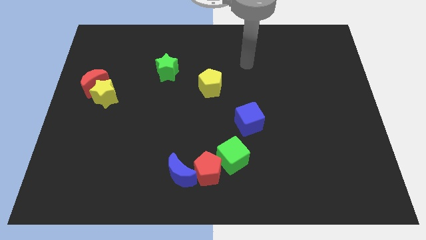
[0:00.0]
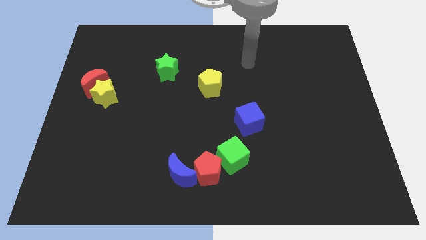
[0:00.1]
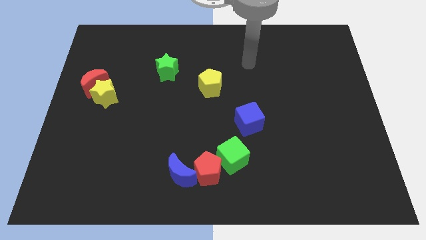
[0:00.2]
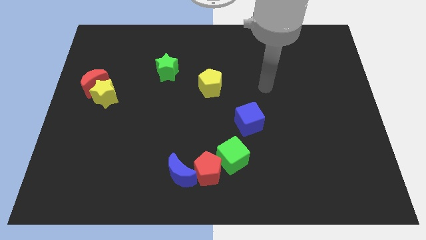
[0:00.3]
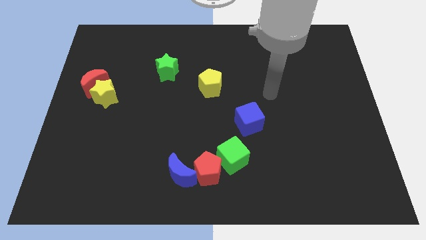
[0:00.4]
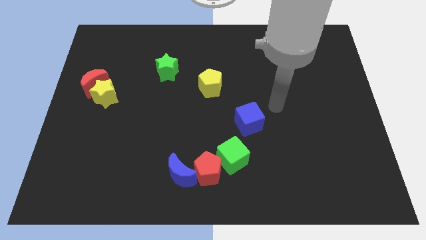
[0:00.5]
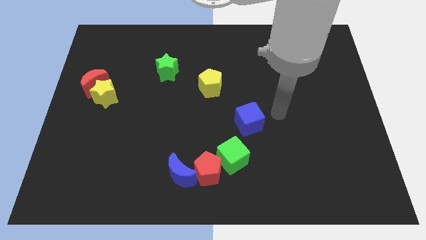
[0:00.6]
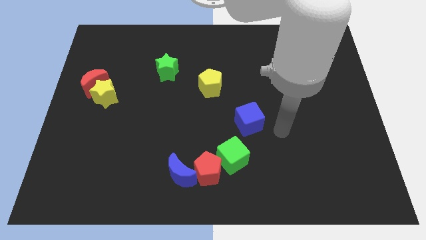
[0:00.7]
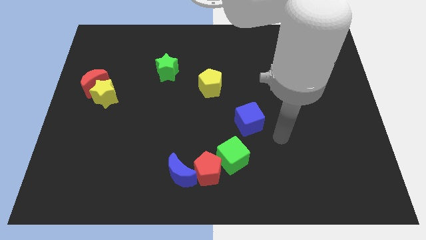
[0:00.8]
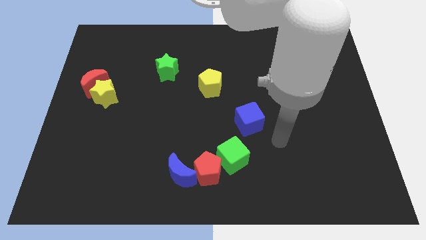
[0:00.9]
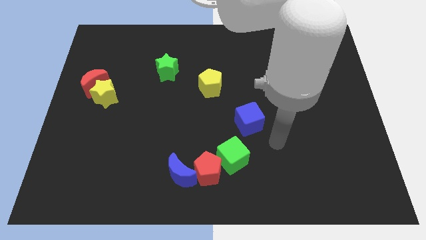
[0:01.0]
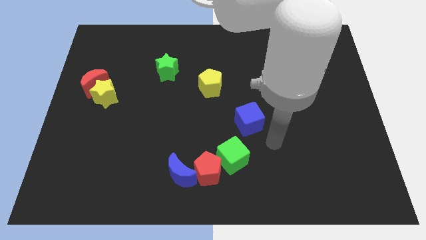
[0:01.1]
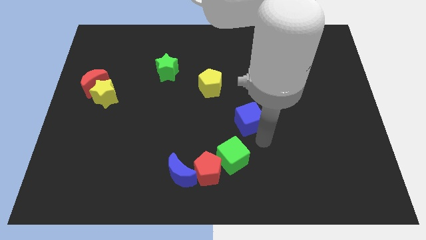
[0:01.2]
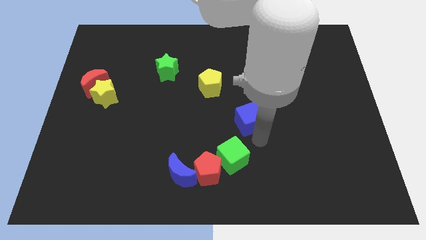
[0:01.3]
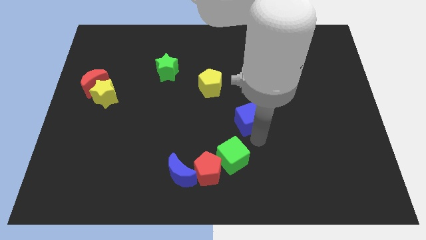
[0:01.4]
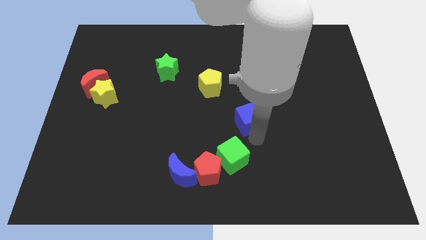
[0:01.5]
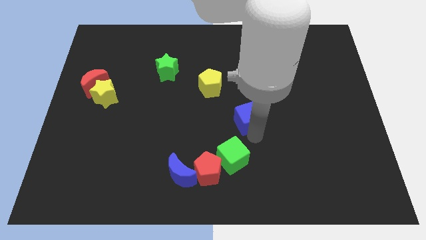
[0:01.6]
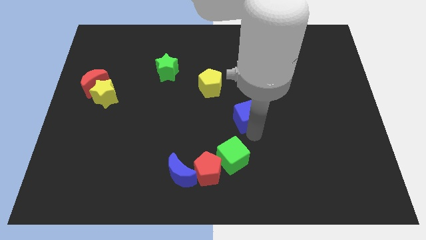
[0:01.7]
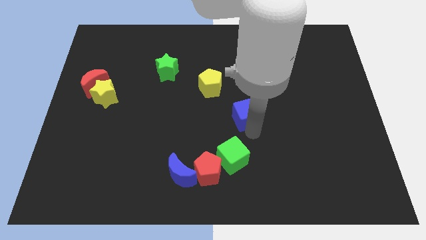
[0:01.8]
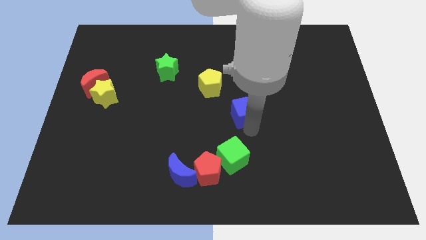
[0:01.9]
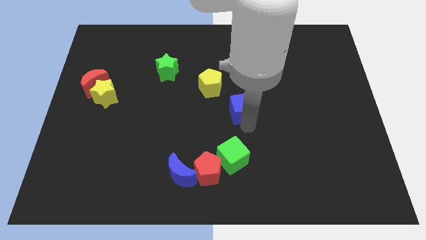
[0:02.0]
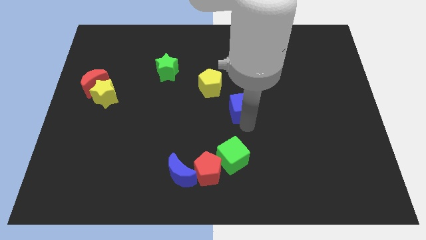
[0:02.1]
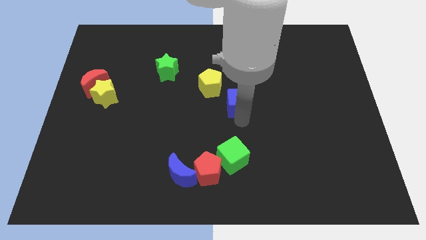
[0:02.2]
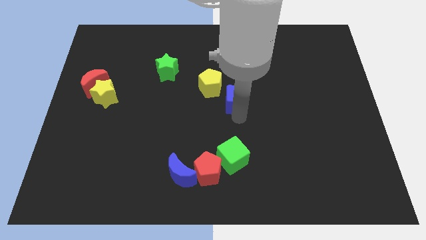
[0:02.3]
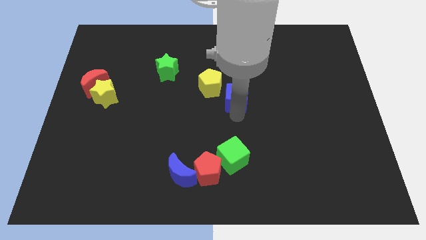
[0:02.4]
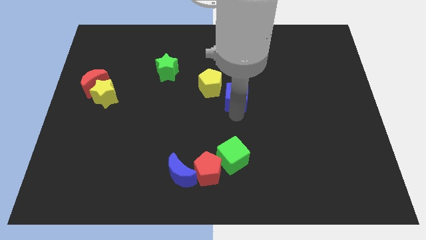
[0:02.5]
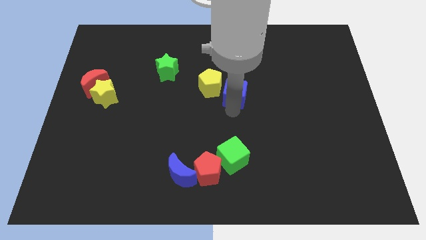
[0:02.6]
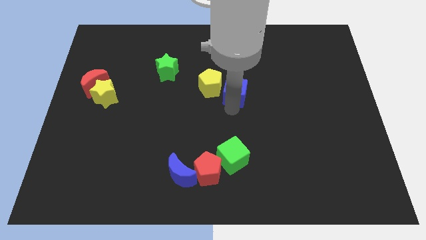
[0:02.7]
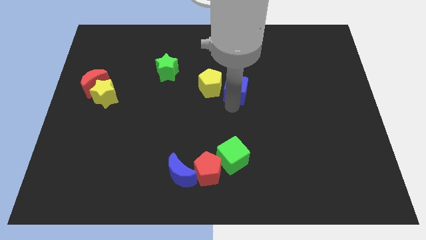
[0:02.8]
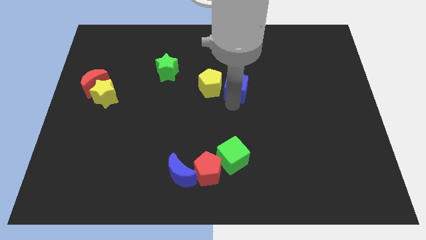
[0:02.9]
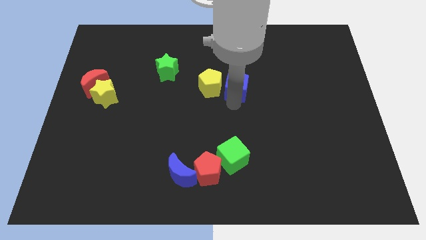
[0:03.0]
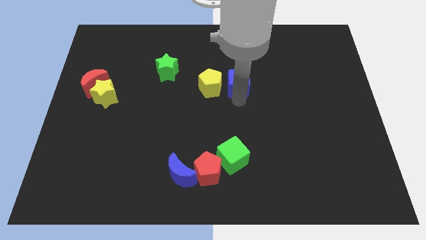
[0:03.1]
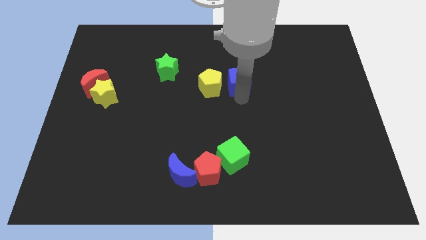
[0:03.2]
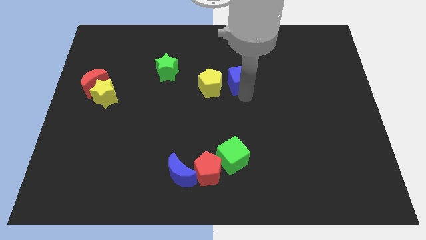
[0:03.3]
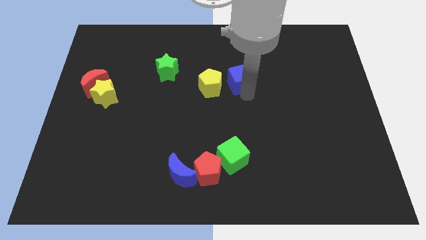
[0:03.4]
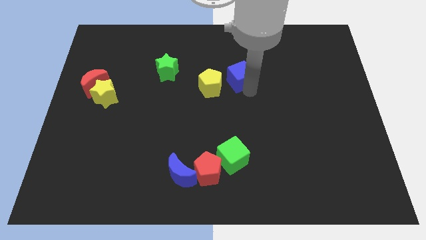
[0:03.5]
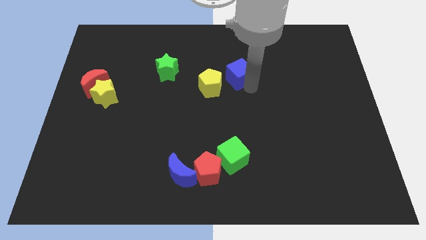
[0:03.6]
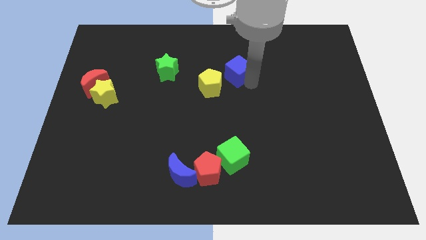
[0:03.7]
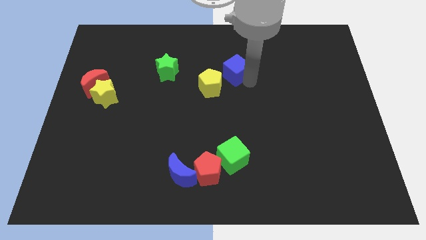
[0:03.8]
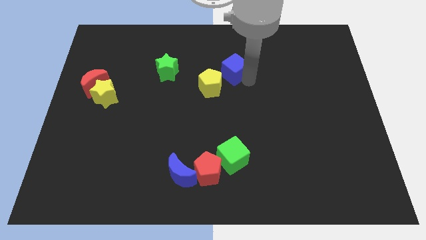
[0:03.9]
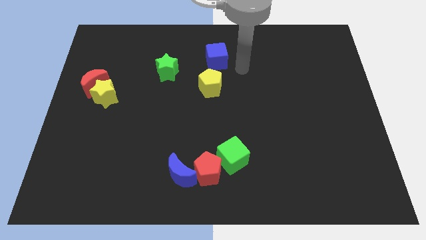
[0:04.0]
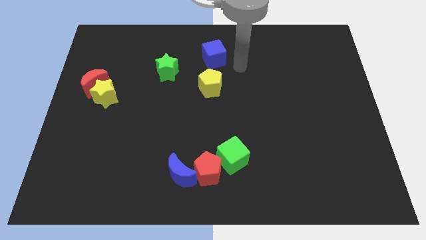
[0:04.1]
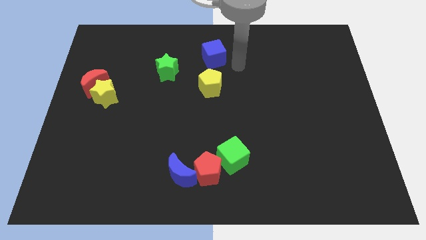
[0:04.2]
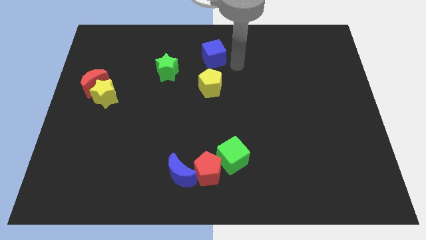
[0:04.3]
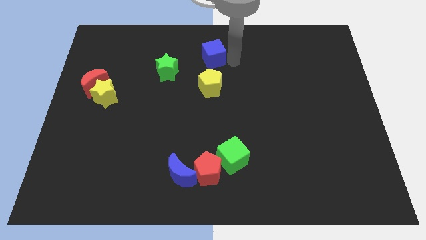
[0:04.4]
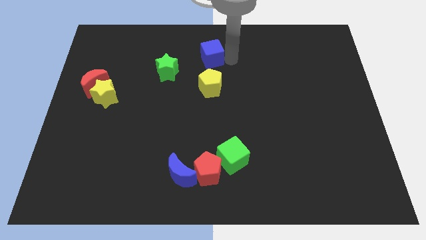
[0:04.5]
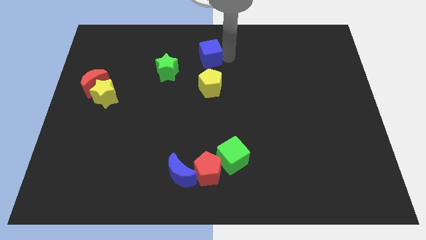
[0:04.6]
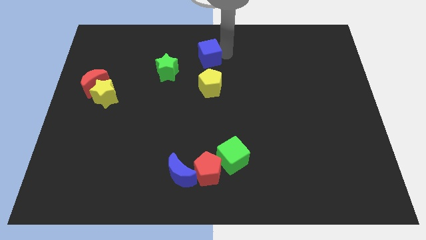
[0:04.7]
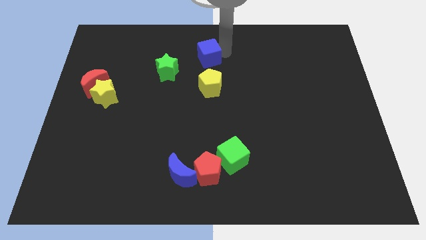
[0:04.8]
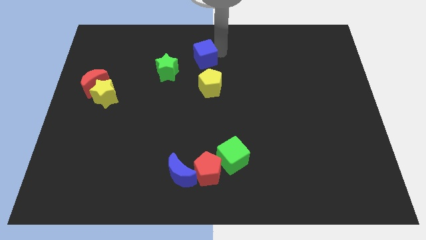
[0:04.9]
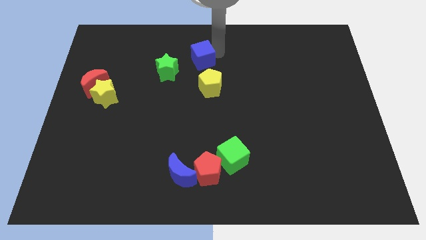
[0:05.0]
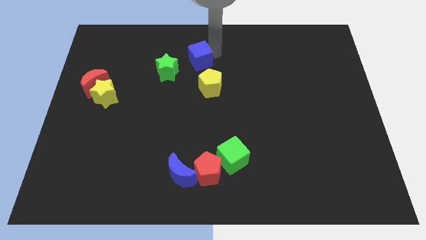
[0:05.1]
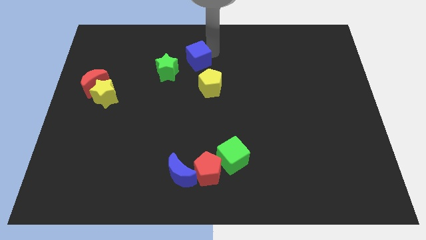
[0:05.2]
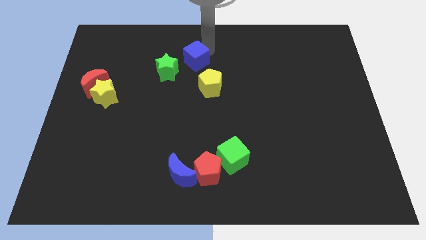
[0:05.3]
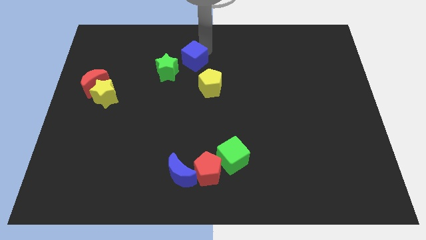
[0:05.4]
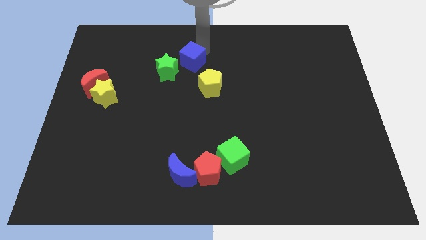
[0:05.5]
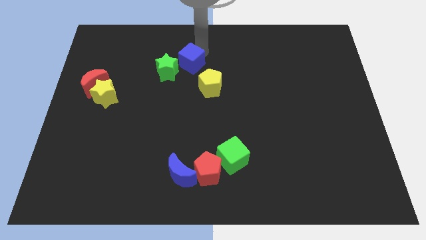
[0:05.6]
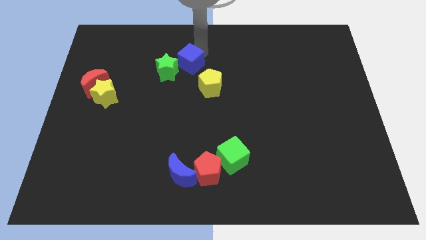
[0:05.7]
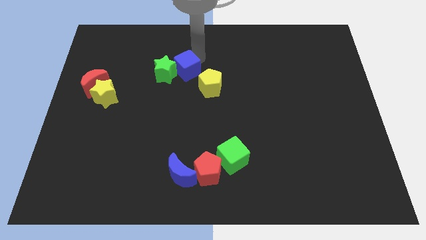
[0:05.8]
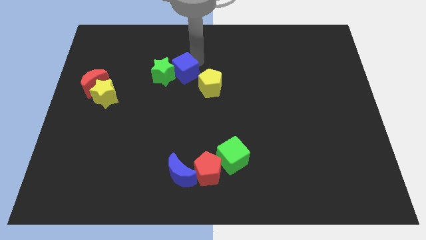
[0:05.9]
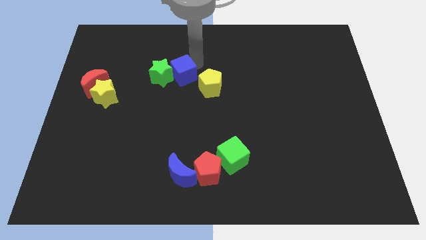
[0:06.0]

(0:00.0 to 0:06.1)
slide the blue cube next to the green star

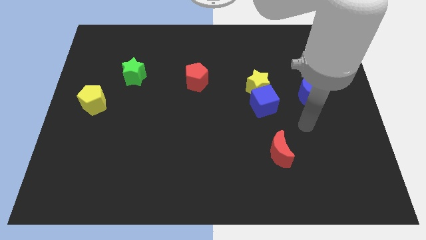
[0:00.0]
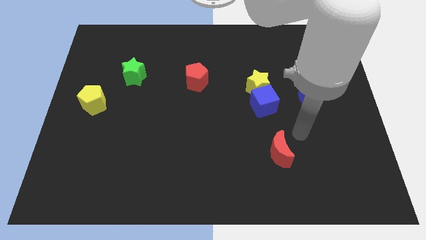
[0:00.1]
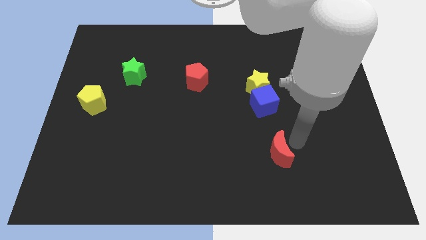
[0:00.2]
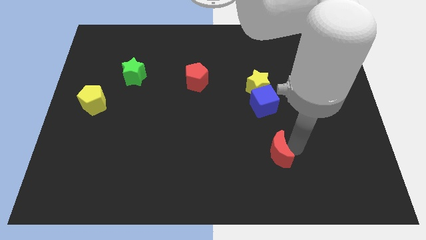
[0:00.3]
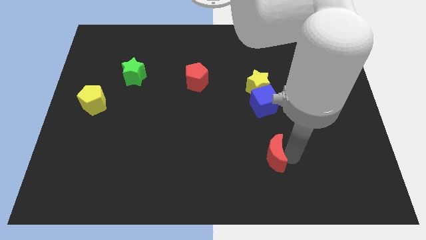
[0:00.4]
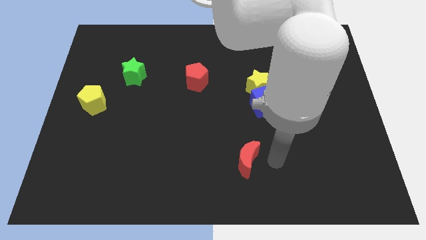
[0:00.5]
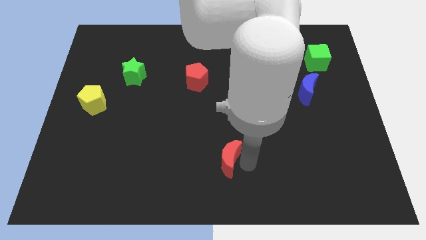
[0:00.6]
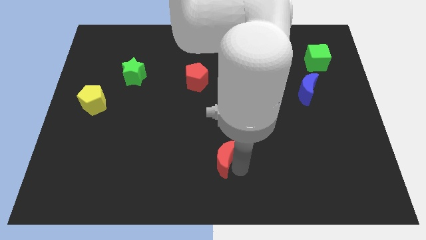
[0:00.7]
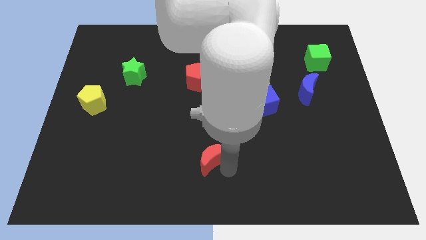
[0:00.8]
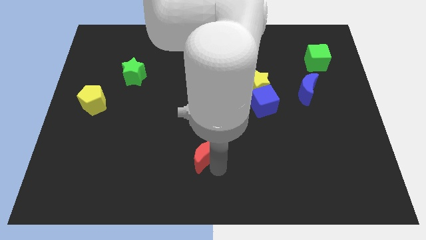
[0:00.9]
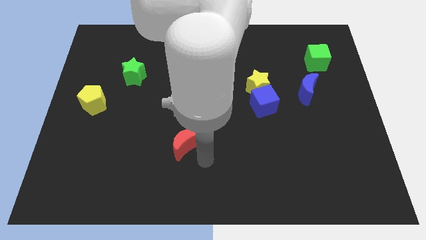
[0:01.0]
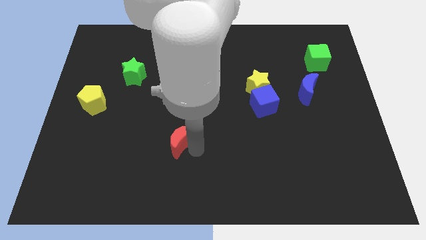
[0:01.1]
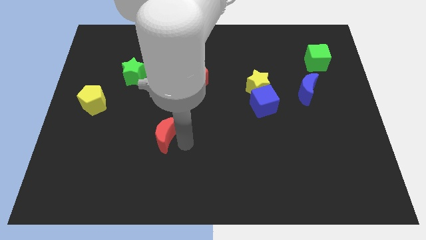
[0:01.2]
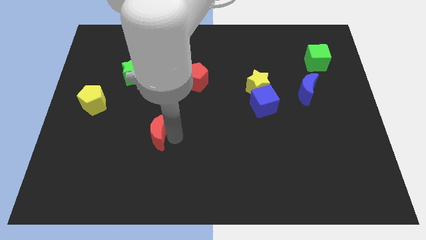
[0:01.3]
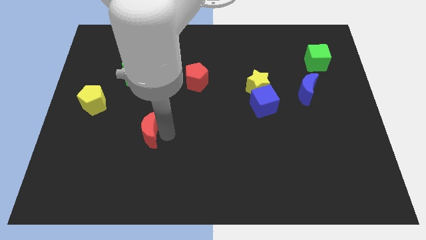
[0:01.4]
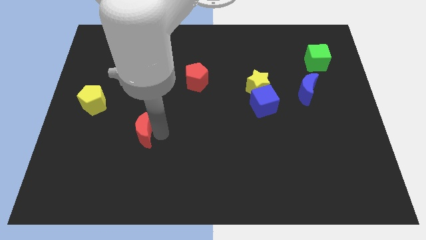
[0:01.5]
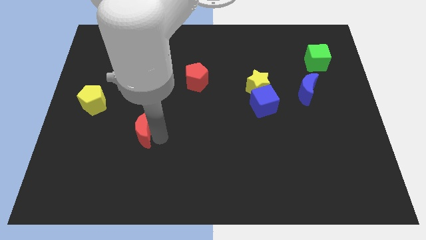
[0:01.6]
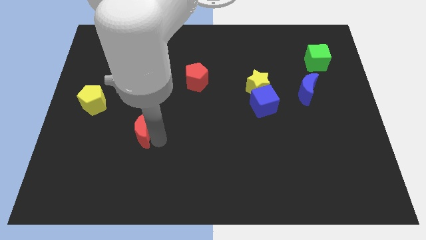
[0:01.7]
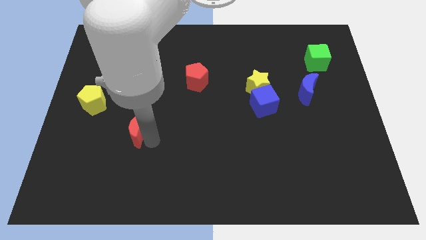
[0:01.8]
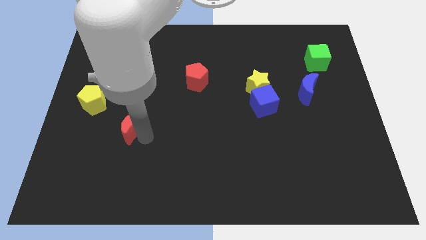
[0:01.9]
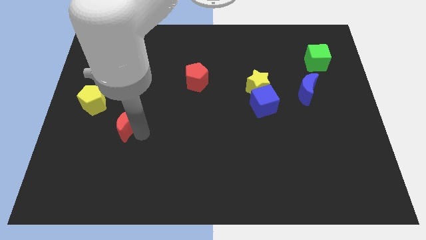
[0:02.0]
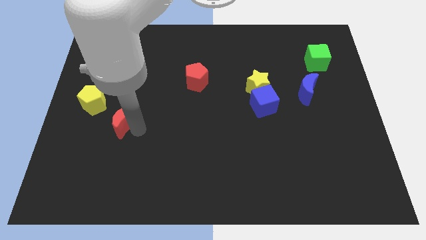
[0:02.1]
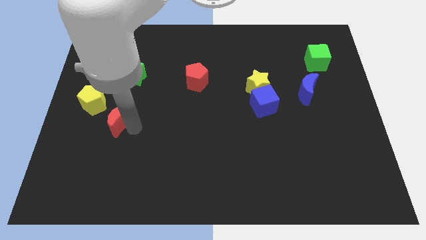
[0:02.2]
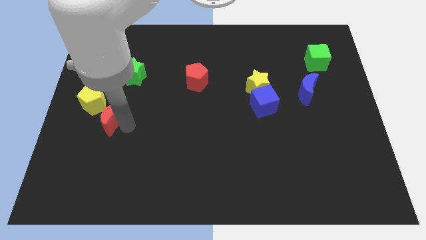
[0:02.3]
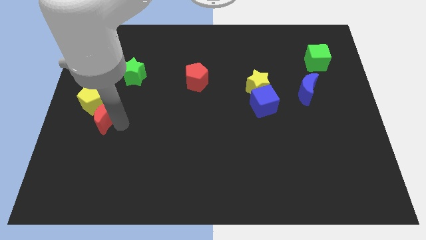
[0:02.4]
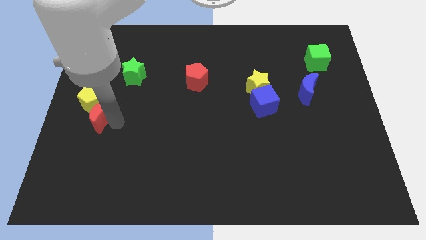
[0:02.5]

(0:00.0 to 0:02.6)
move the red moon towards the yellow pentagon
